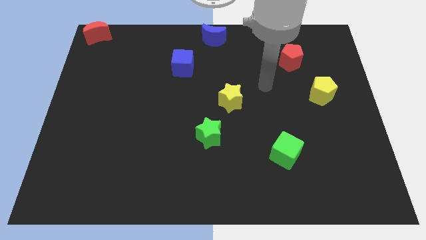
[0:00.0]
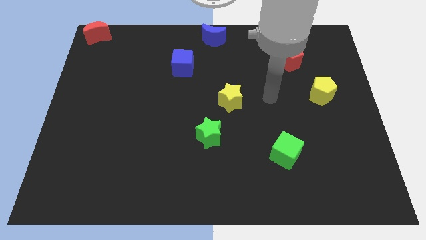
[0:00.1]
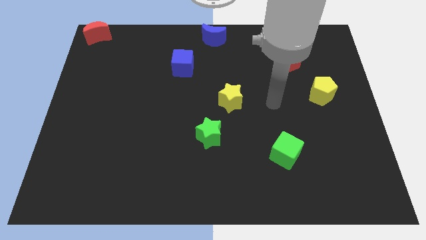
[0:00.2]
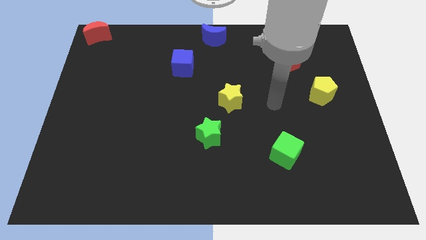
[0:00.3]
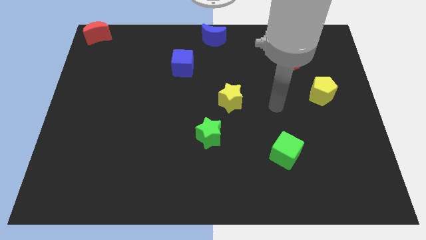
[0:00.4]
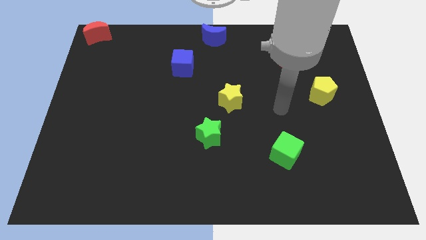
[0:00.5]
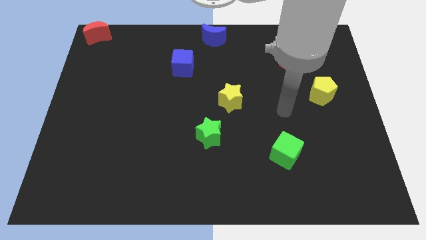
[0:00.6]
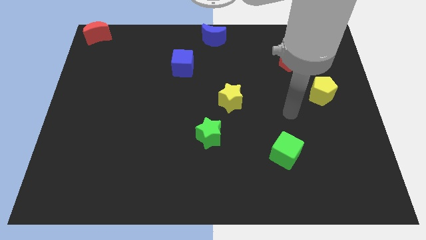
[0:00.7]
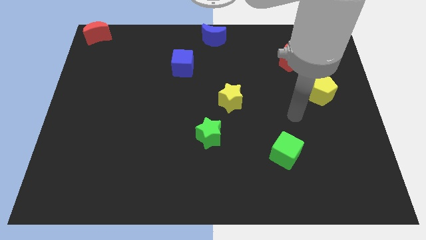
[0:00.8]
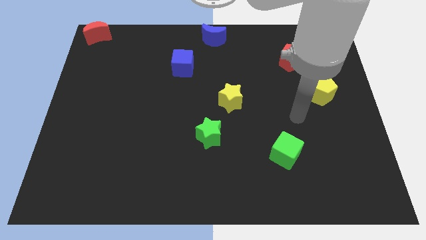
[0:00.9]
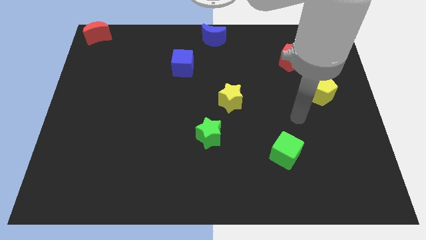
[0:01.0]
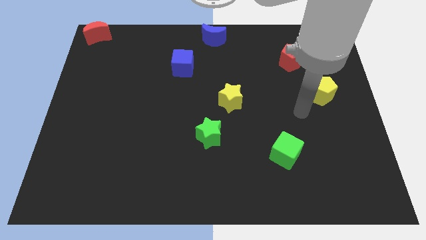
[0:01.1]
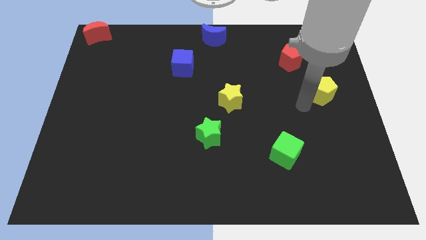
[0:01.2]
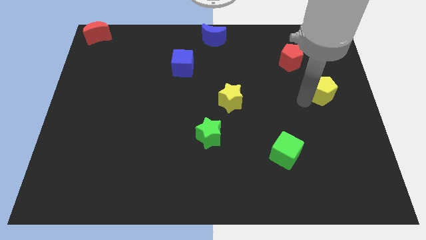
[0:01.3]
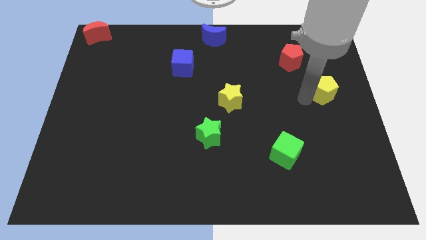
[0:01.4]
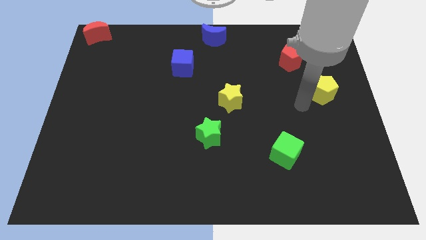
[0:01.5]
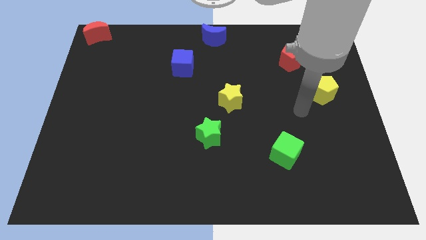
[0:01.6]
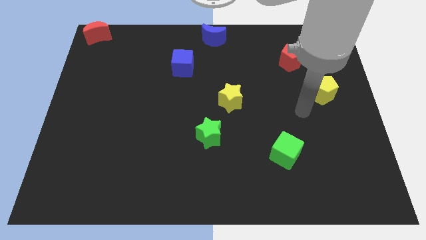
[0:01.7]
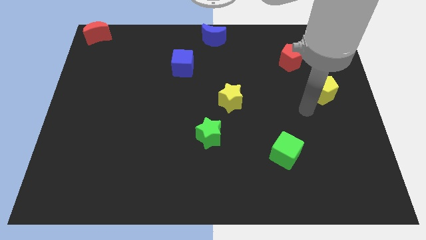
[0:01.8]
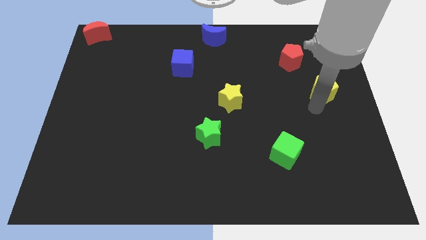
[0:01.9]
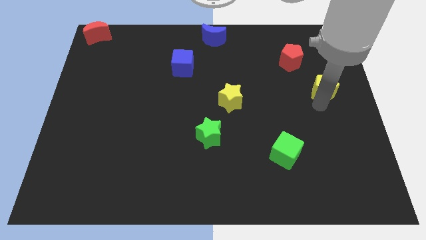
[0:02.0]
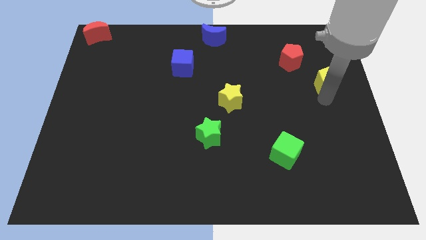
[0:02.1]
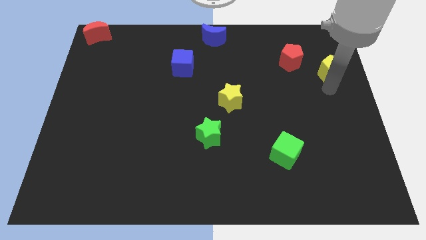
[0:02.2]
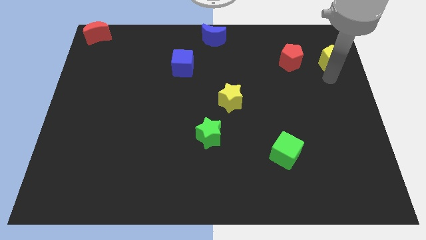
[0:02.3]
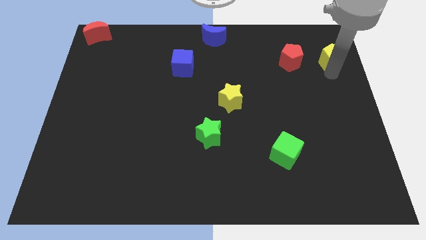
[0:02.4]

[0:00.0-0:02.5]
move the yellow pentagon right to the red pentagon

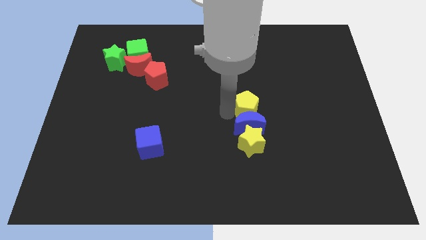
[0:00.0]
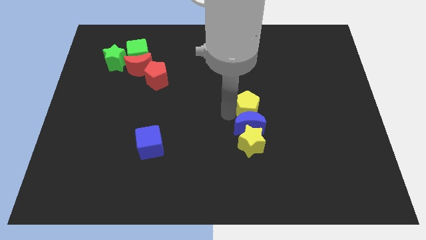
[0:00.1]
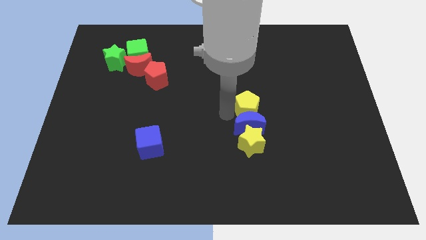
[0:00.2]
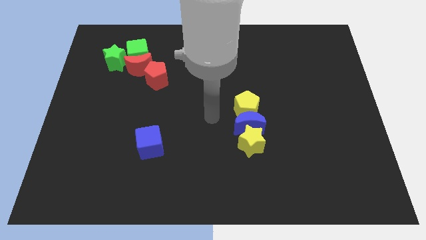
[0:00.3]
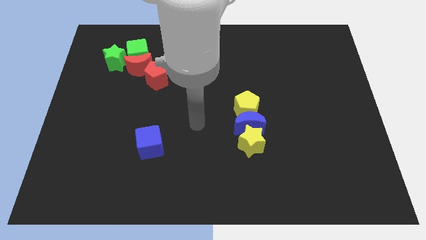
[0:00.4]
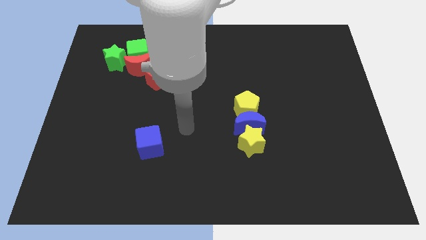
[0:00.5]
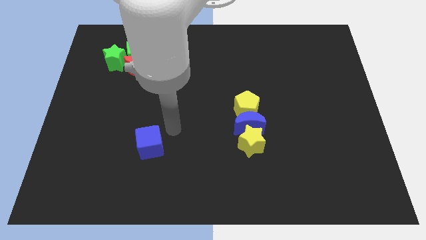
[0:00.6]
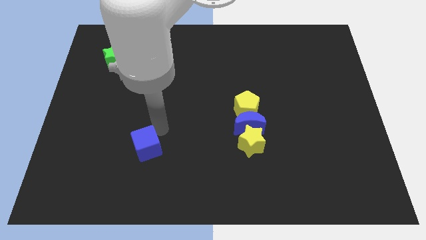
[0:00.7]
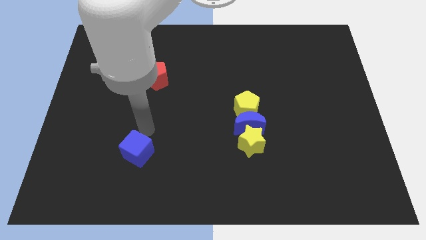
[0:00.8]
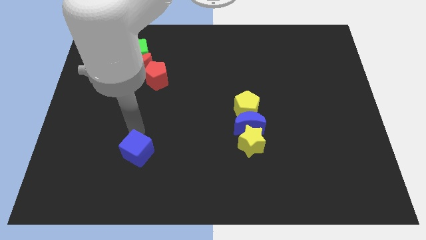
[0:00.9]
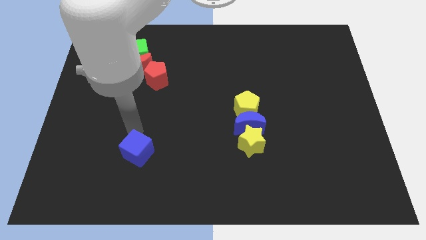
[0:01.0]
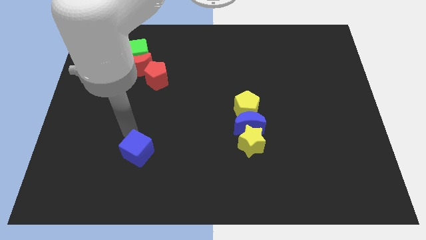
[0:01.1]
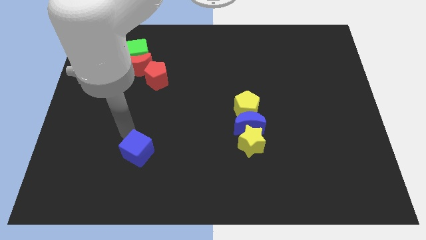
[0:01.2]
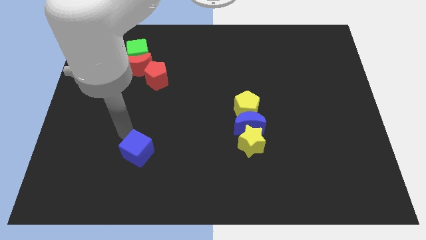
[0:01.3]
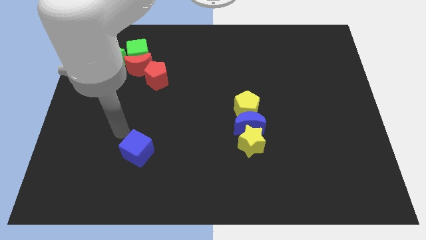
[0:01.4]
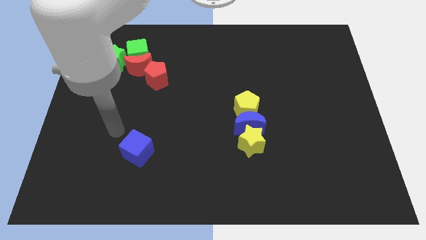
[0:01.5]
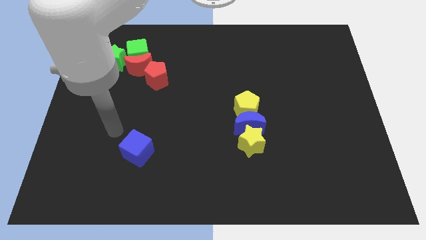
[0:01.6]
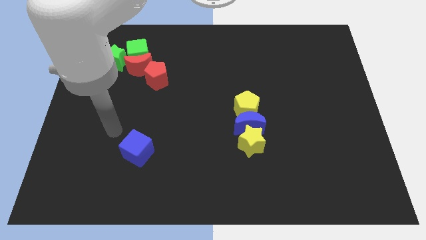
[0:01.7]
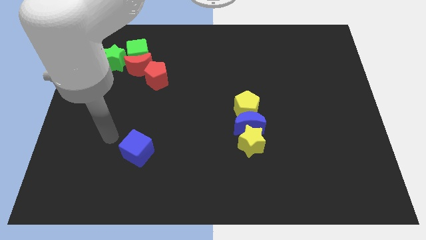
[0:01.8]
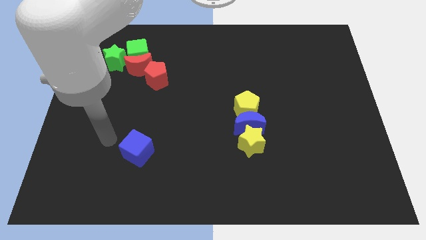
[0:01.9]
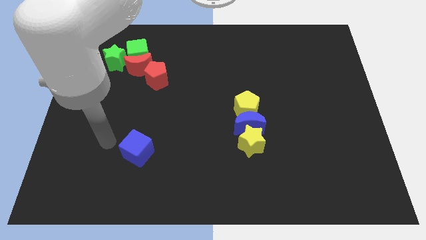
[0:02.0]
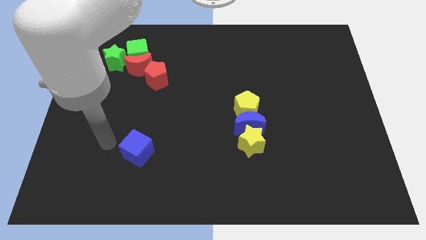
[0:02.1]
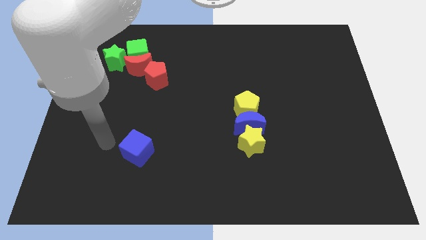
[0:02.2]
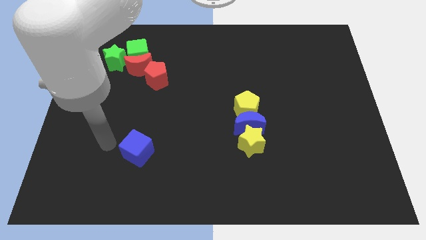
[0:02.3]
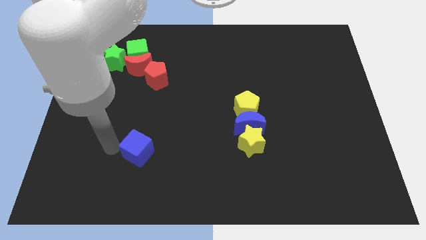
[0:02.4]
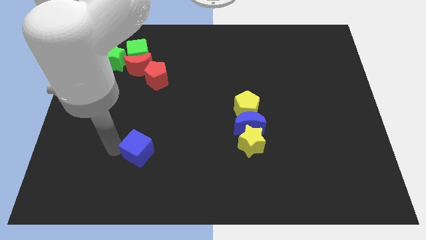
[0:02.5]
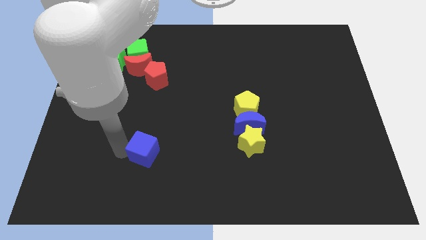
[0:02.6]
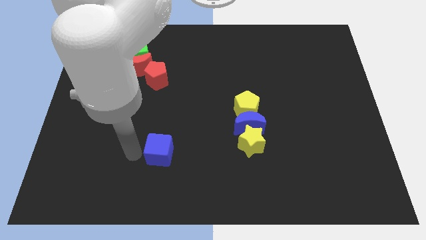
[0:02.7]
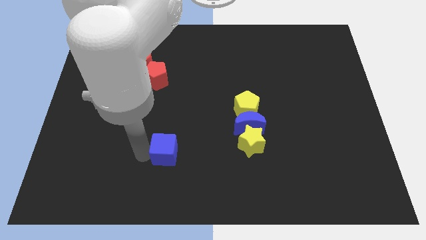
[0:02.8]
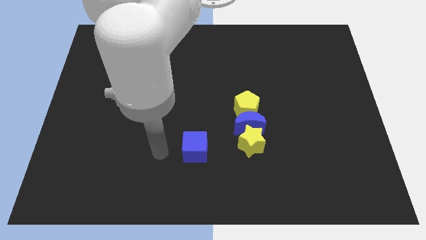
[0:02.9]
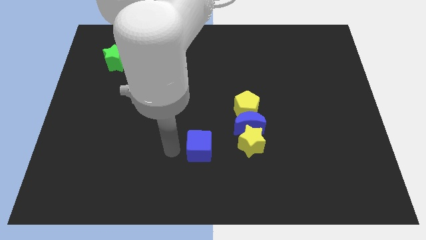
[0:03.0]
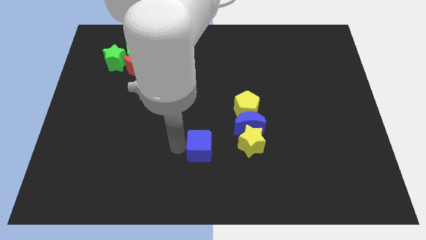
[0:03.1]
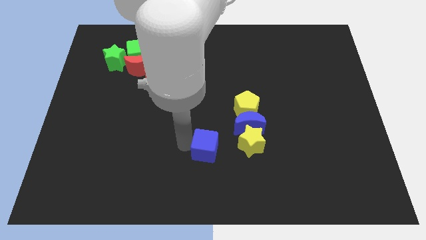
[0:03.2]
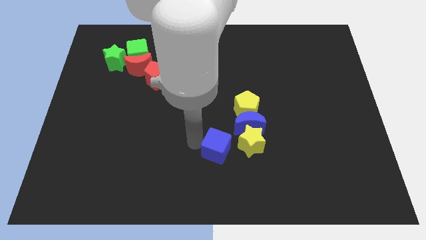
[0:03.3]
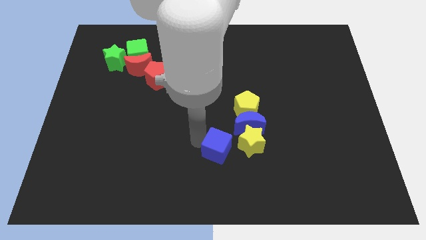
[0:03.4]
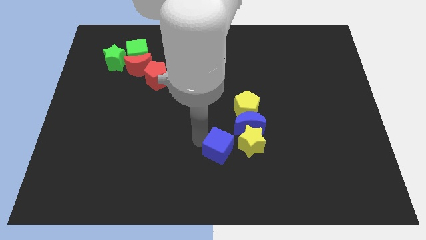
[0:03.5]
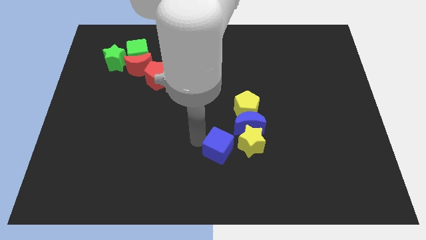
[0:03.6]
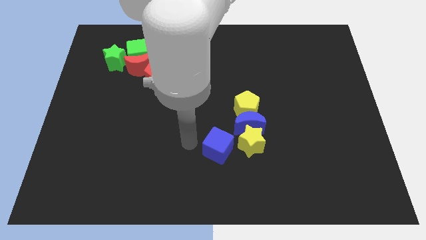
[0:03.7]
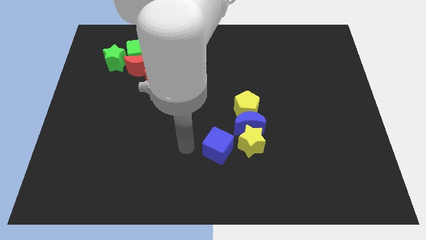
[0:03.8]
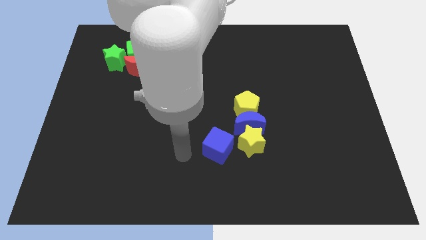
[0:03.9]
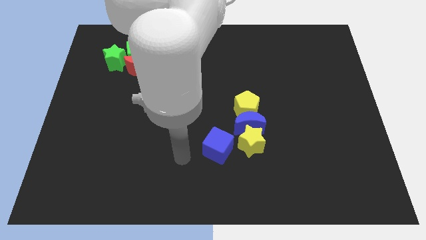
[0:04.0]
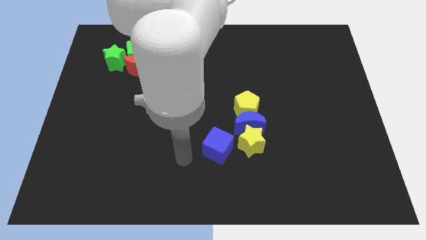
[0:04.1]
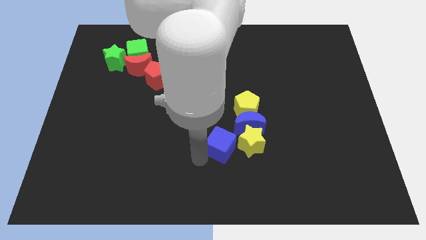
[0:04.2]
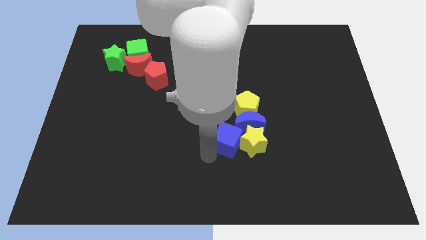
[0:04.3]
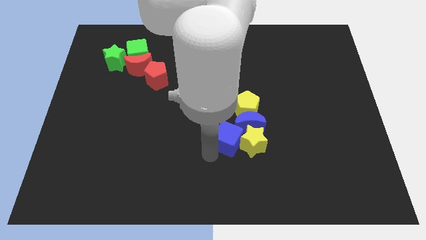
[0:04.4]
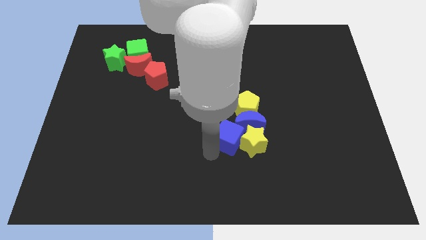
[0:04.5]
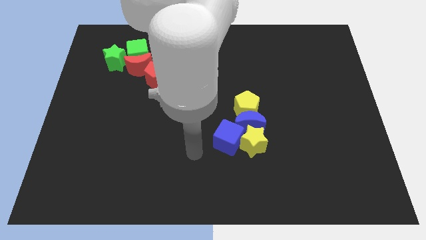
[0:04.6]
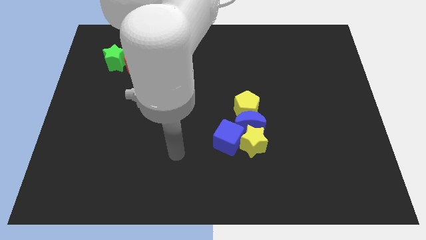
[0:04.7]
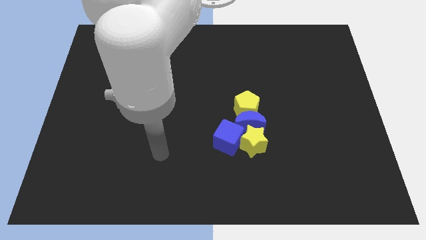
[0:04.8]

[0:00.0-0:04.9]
move the blue cube into the left side of the yellow star

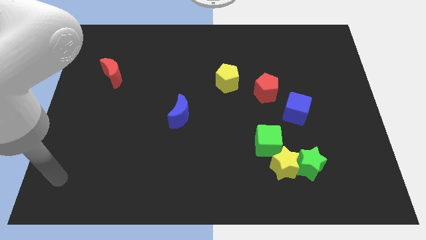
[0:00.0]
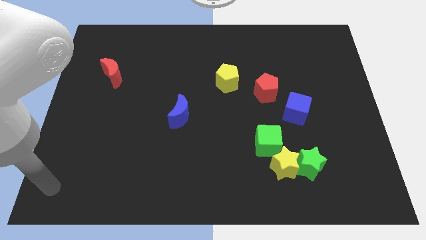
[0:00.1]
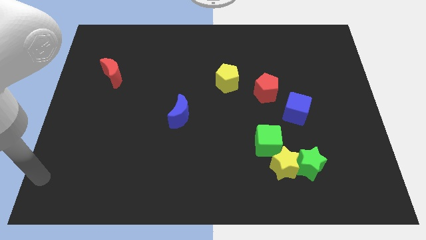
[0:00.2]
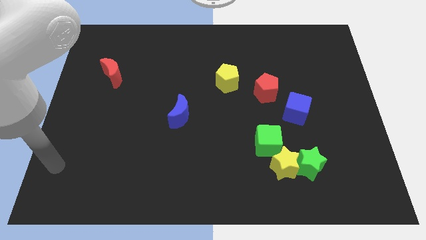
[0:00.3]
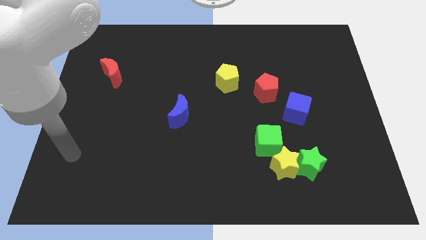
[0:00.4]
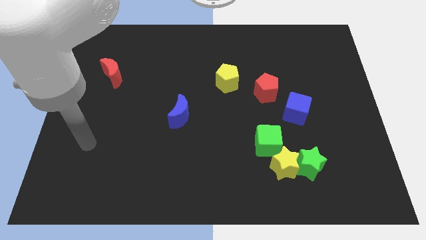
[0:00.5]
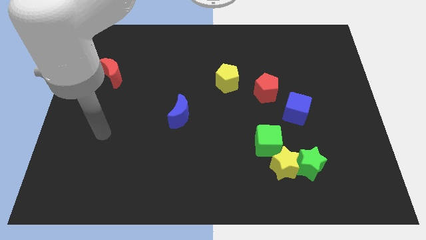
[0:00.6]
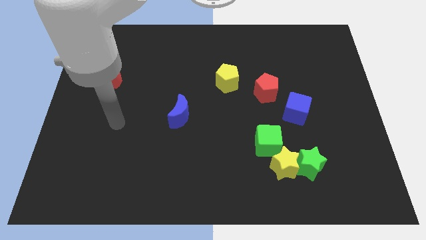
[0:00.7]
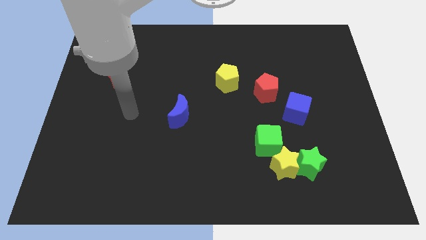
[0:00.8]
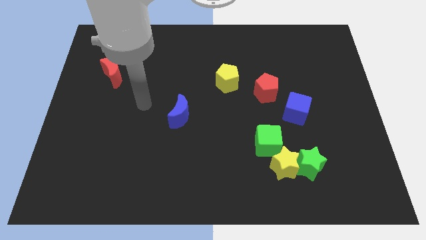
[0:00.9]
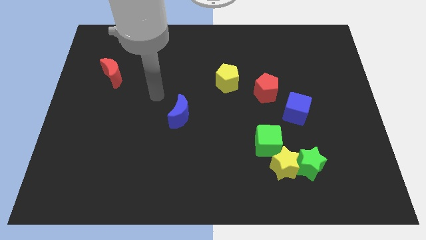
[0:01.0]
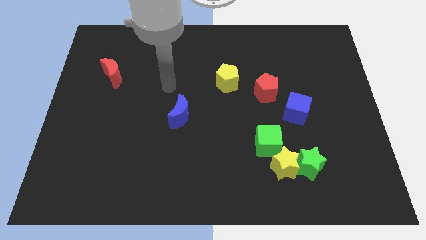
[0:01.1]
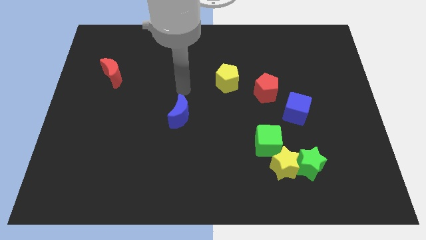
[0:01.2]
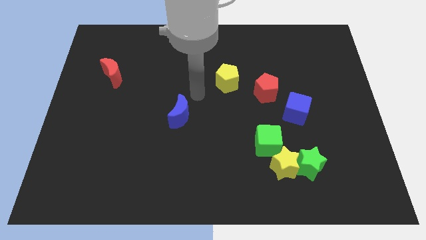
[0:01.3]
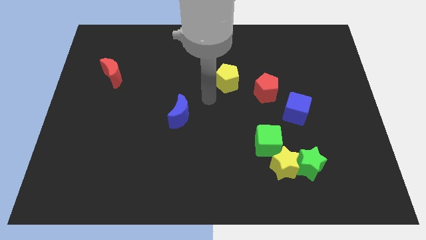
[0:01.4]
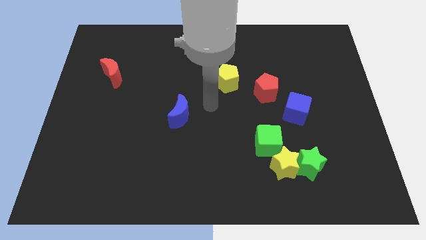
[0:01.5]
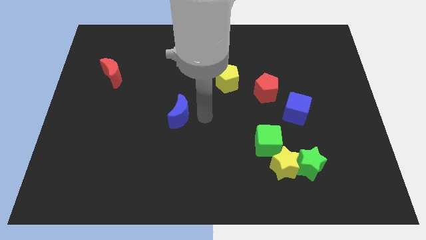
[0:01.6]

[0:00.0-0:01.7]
move arm to the centre of the board

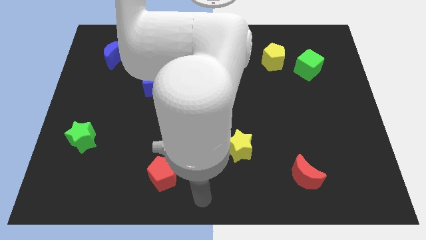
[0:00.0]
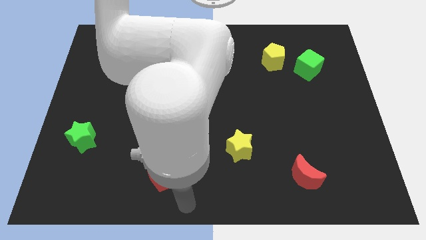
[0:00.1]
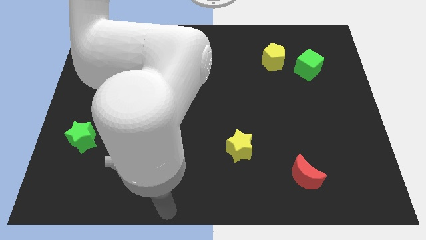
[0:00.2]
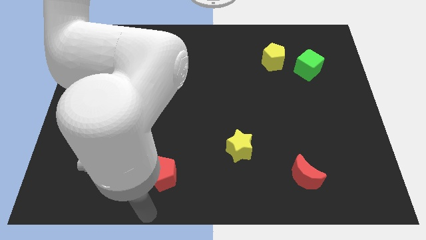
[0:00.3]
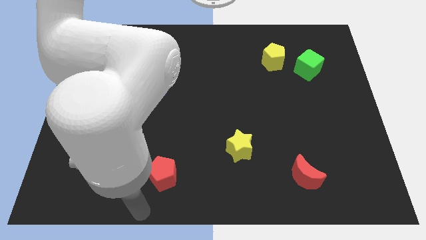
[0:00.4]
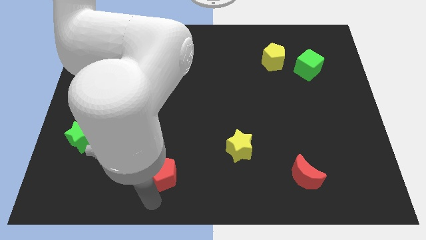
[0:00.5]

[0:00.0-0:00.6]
point your arm at the bottom of red pentagon
